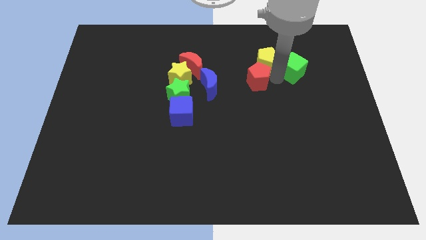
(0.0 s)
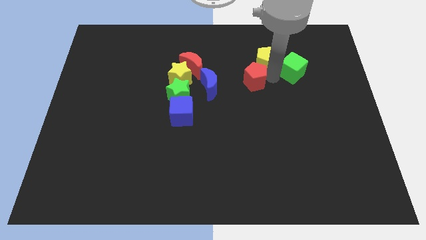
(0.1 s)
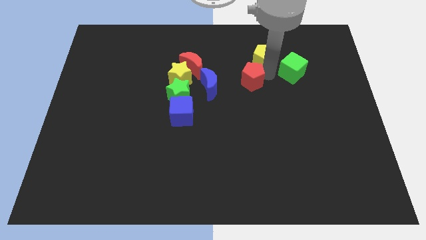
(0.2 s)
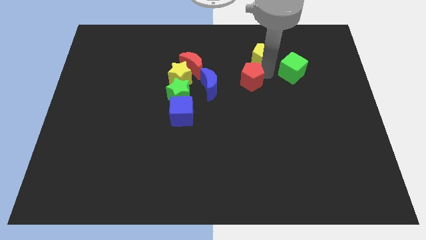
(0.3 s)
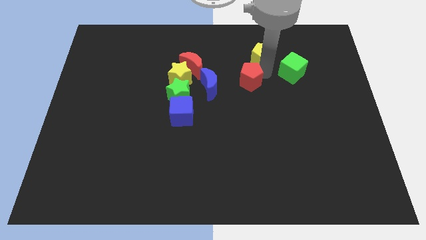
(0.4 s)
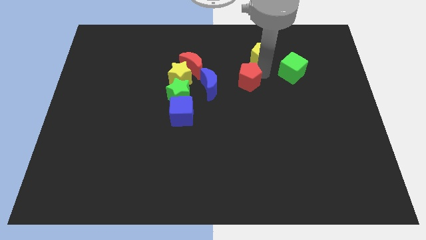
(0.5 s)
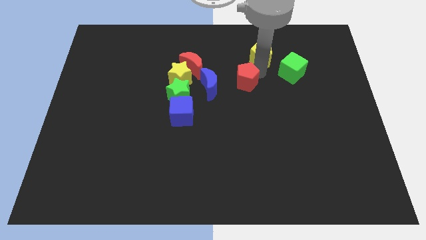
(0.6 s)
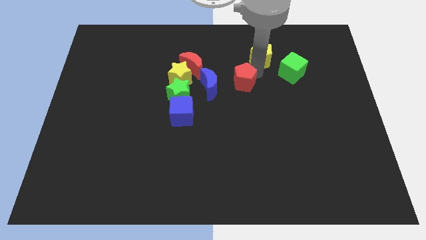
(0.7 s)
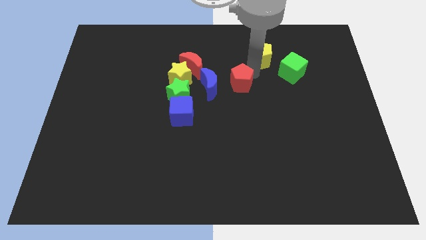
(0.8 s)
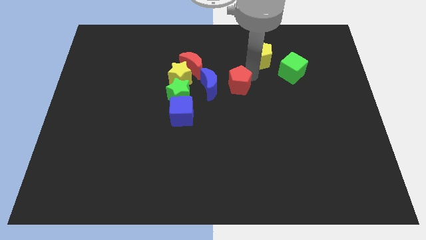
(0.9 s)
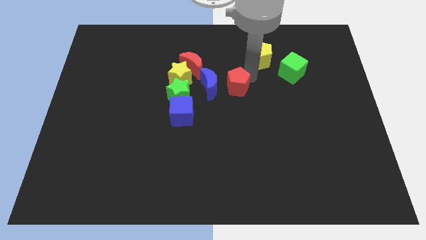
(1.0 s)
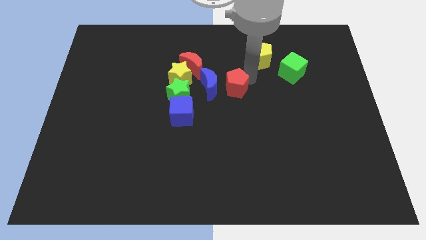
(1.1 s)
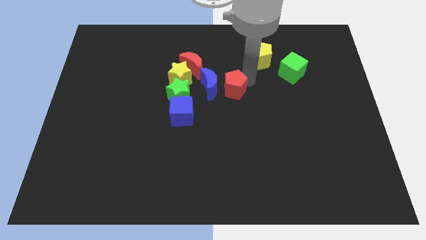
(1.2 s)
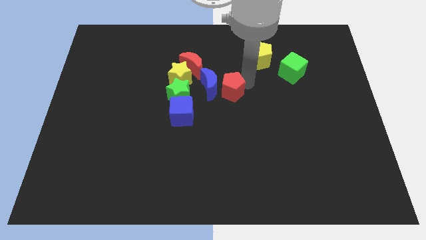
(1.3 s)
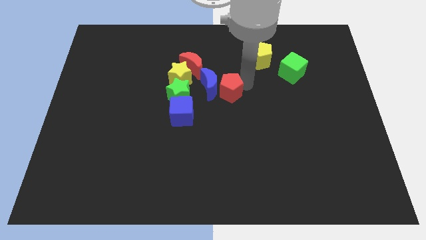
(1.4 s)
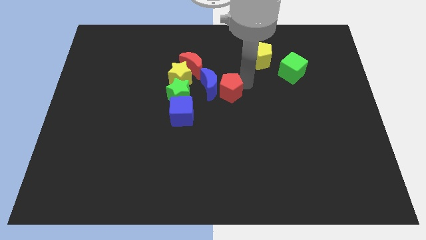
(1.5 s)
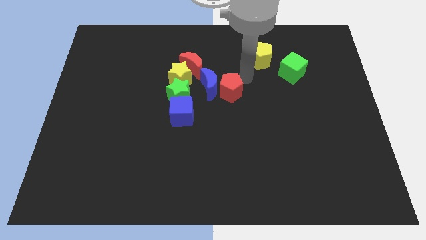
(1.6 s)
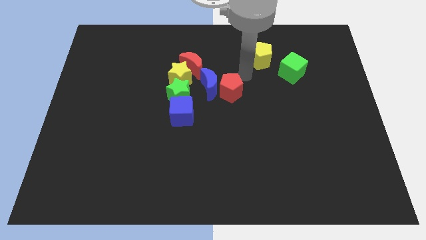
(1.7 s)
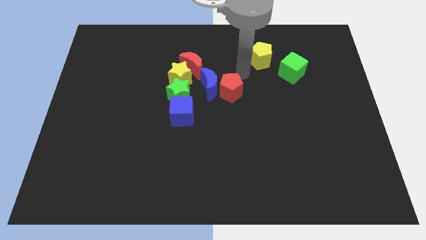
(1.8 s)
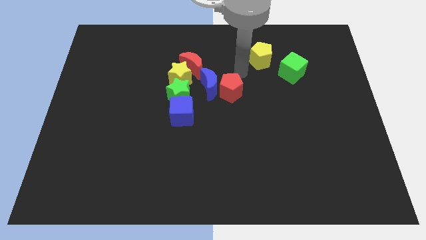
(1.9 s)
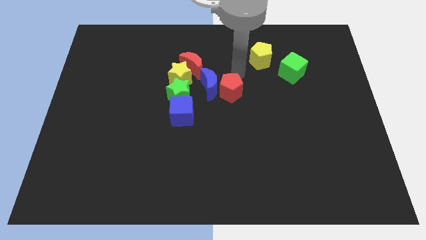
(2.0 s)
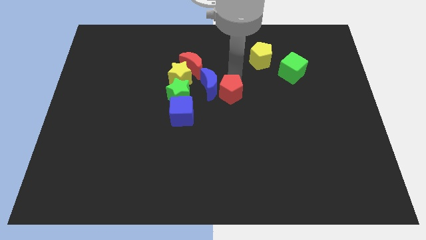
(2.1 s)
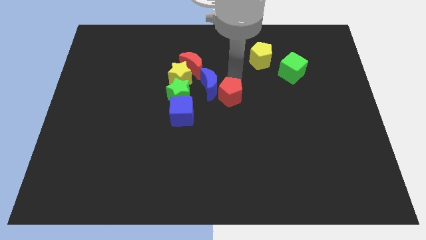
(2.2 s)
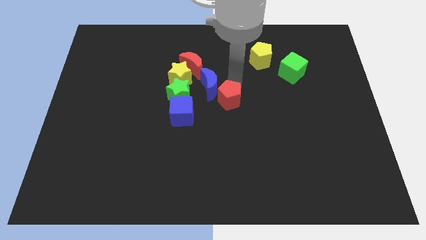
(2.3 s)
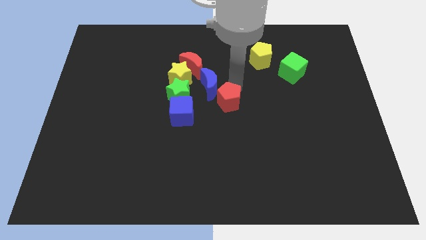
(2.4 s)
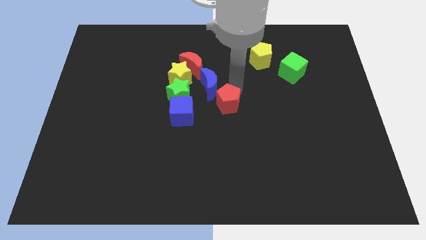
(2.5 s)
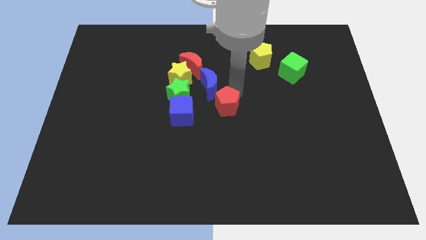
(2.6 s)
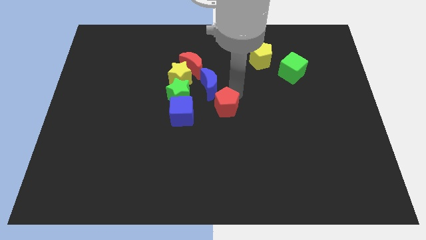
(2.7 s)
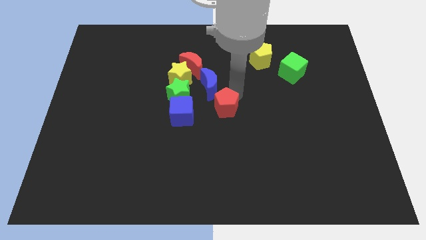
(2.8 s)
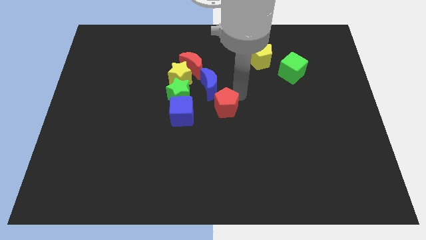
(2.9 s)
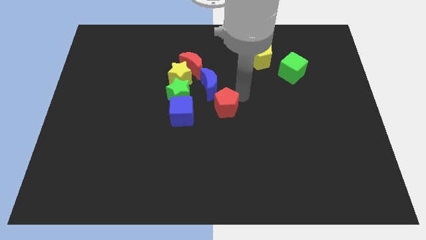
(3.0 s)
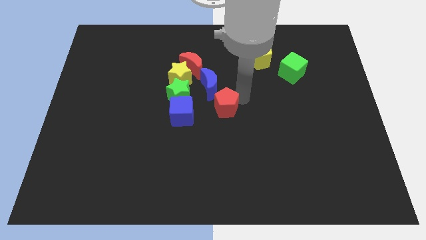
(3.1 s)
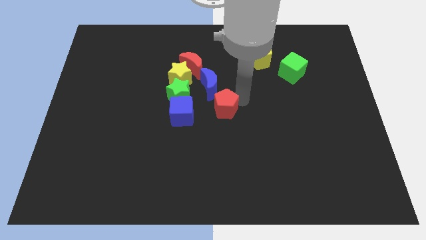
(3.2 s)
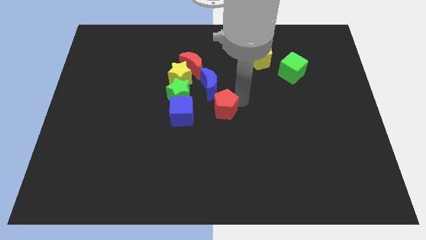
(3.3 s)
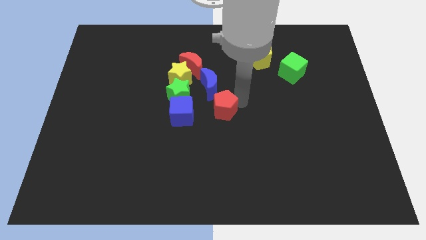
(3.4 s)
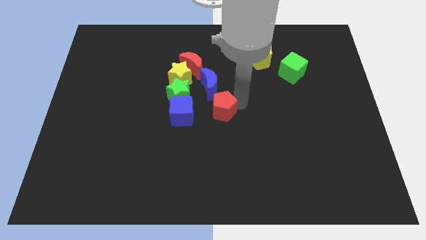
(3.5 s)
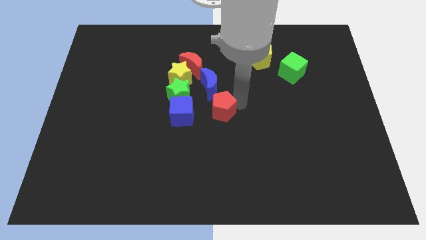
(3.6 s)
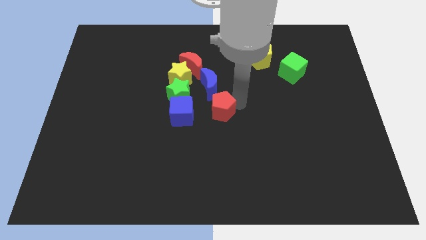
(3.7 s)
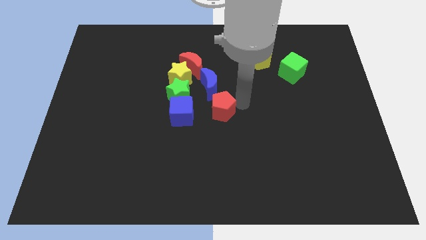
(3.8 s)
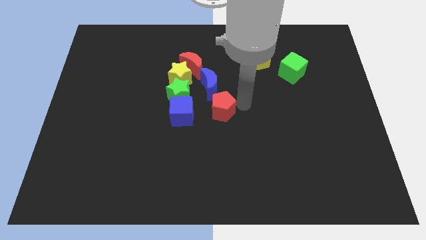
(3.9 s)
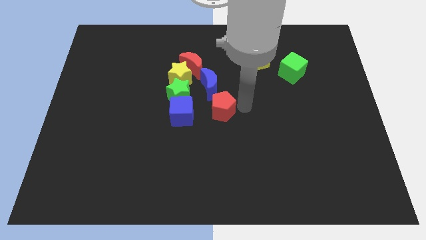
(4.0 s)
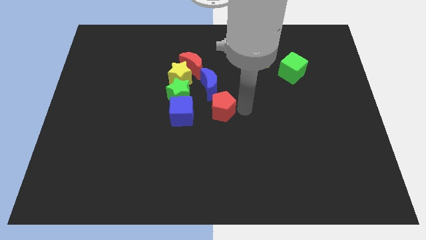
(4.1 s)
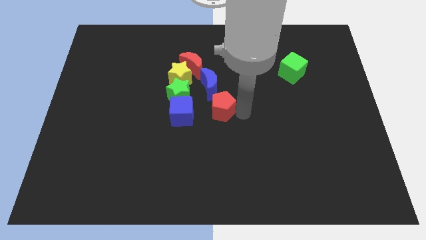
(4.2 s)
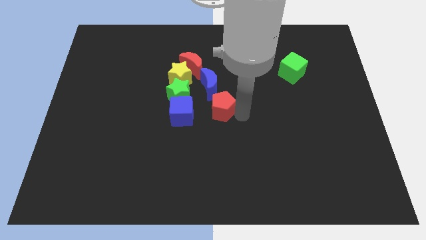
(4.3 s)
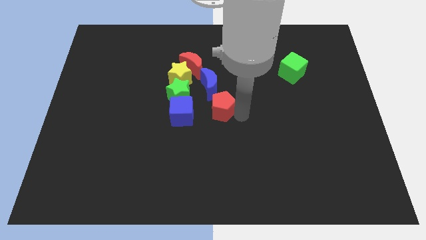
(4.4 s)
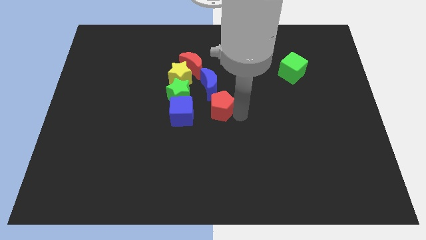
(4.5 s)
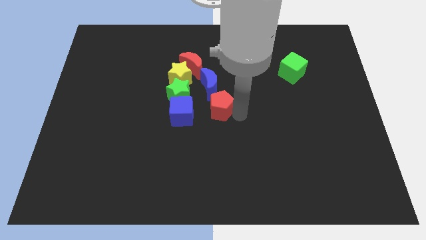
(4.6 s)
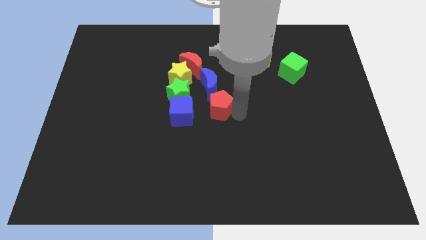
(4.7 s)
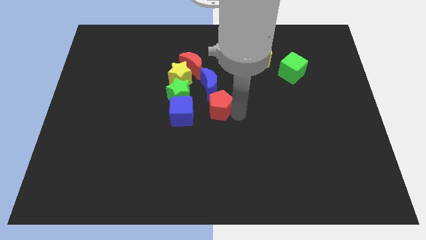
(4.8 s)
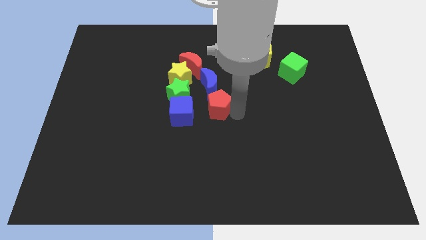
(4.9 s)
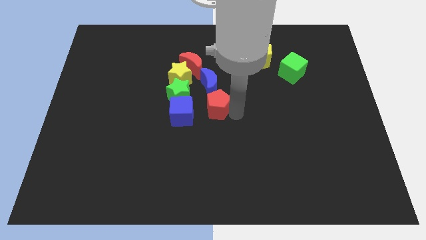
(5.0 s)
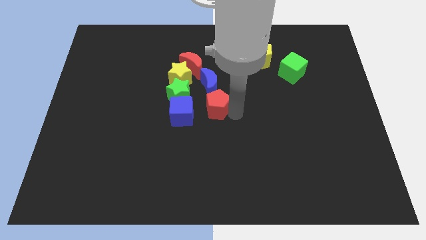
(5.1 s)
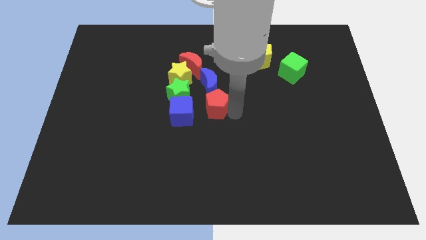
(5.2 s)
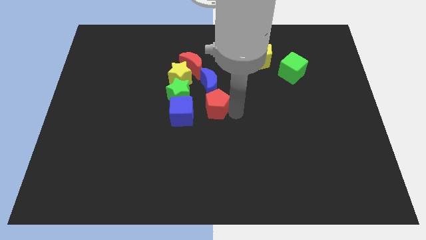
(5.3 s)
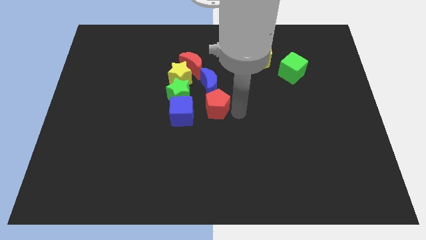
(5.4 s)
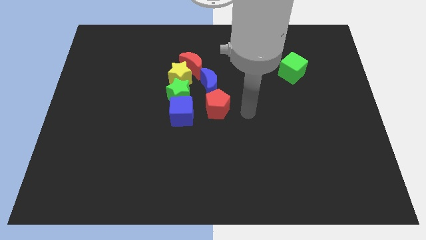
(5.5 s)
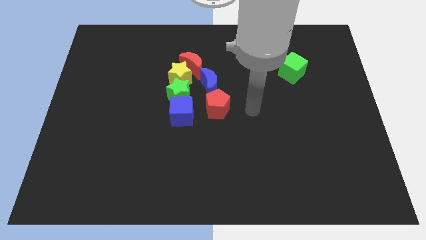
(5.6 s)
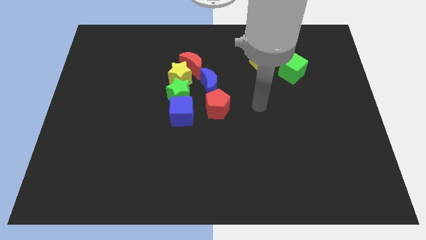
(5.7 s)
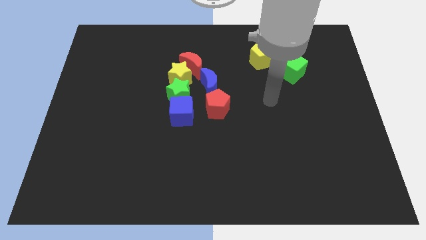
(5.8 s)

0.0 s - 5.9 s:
move red pentagon below the blue crescent

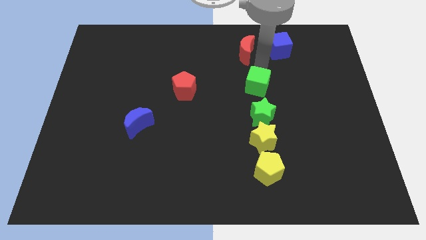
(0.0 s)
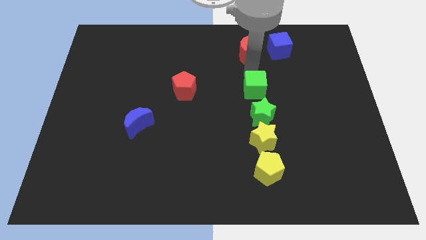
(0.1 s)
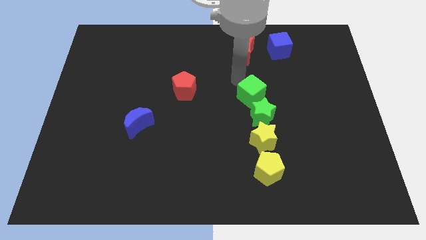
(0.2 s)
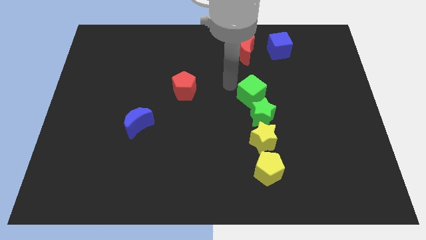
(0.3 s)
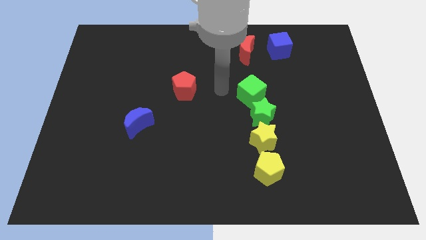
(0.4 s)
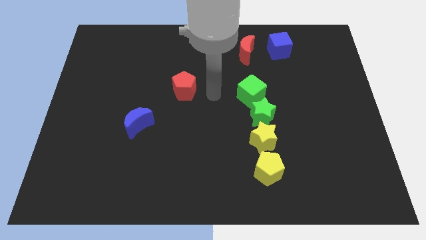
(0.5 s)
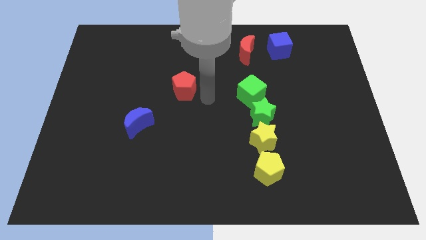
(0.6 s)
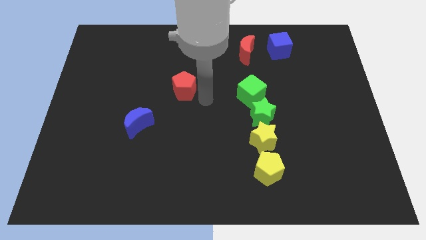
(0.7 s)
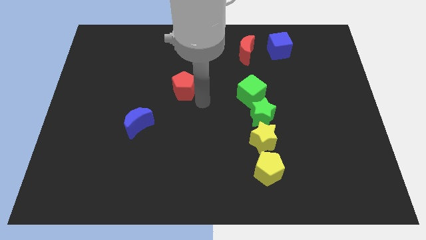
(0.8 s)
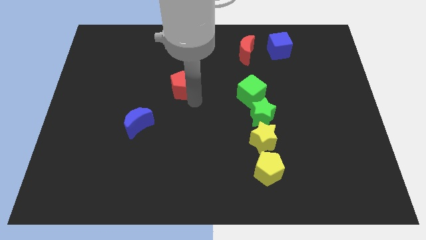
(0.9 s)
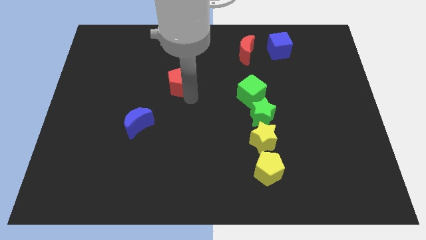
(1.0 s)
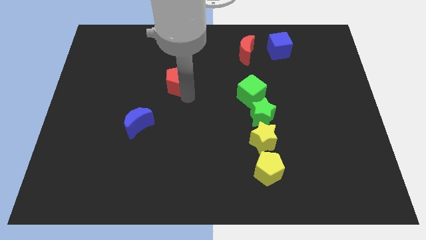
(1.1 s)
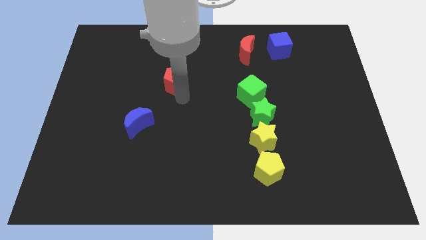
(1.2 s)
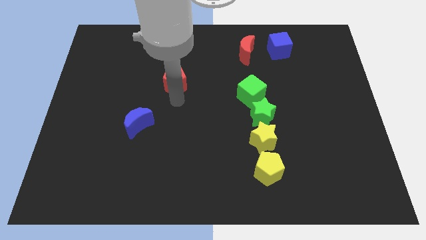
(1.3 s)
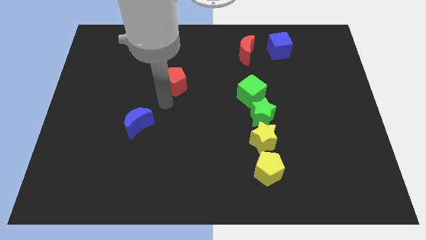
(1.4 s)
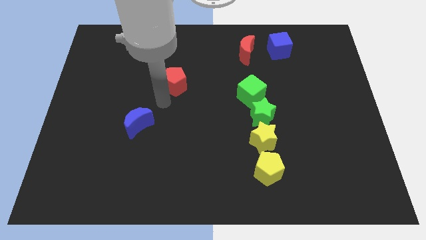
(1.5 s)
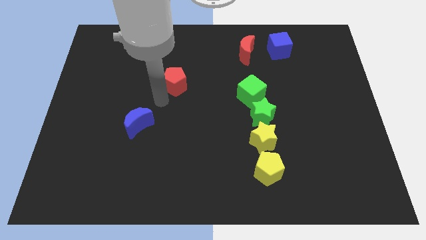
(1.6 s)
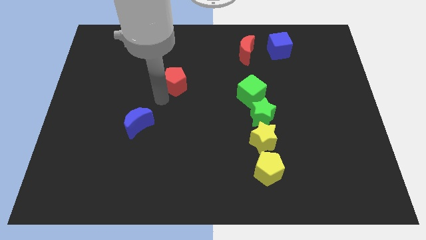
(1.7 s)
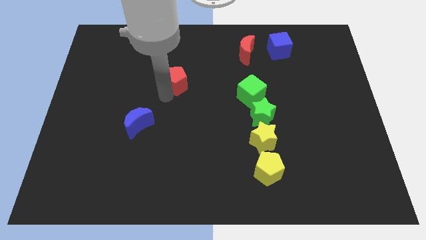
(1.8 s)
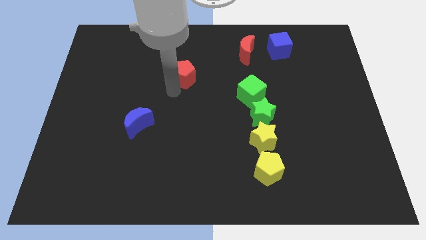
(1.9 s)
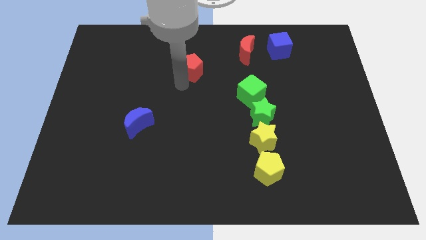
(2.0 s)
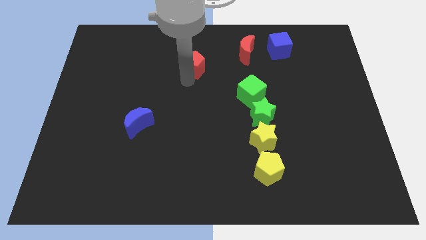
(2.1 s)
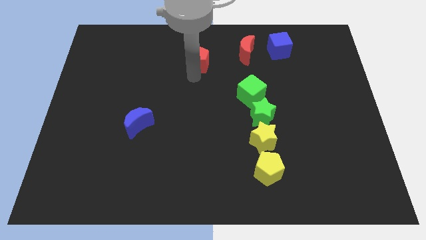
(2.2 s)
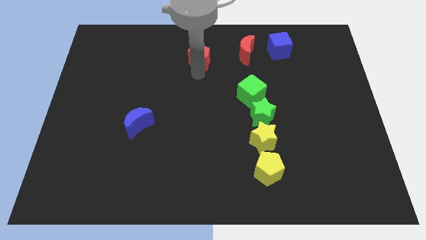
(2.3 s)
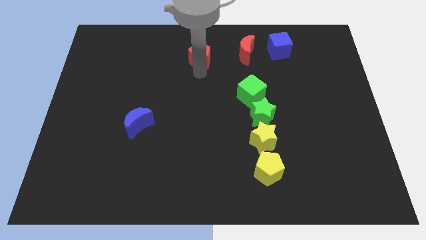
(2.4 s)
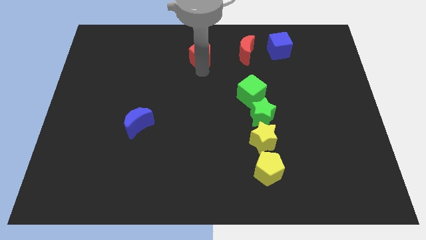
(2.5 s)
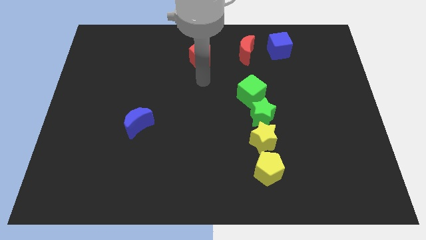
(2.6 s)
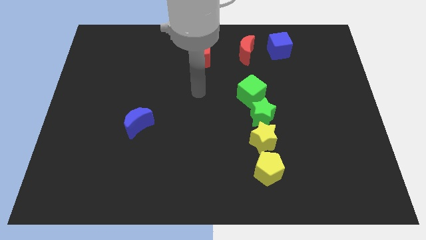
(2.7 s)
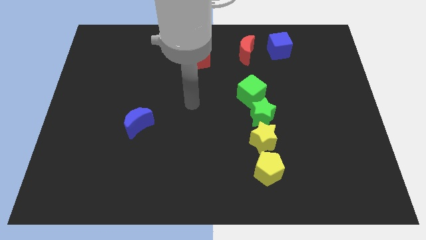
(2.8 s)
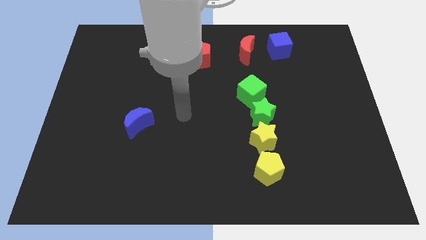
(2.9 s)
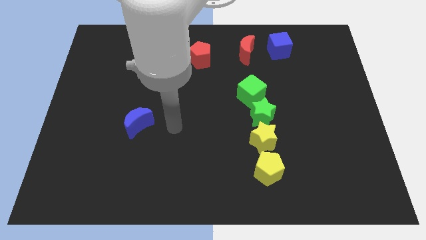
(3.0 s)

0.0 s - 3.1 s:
push the red pentagon horizontally at the left side of the red moon
